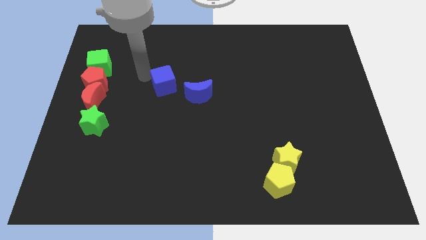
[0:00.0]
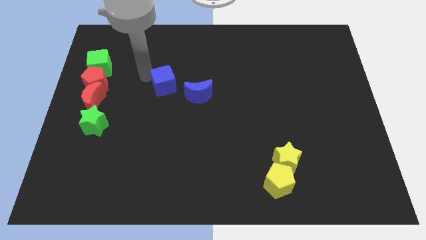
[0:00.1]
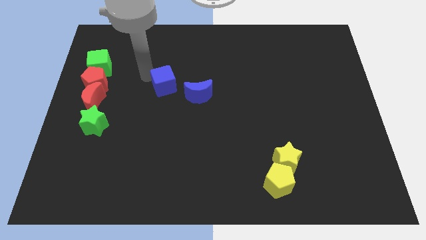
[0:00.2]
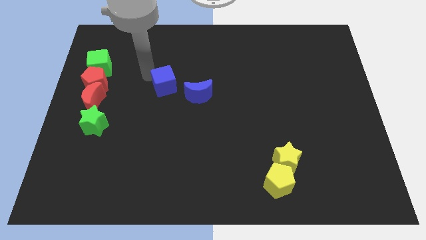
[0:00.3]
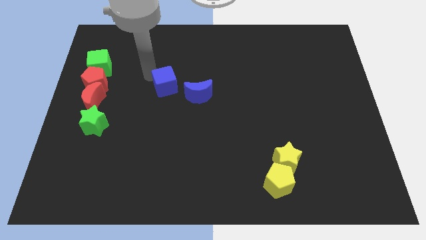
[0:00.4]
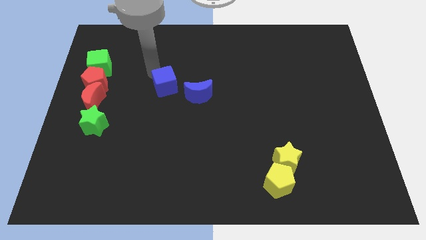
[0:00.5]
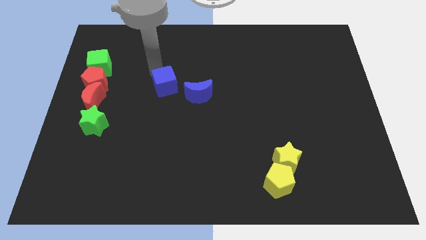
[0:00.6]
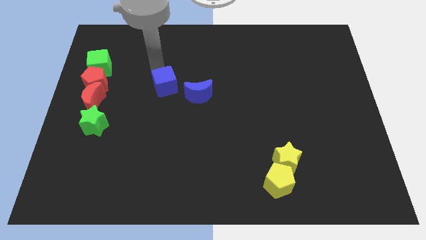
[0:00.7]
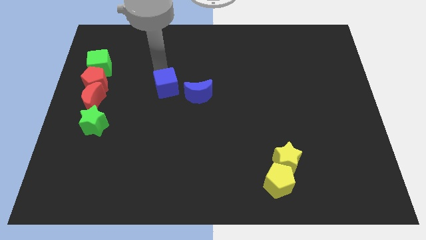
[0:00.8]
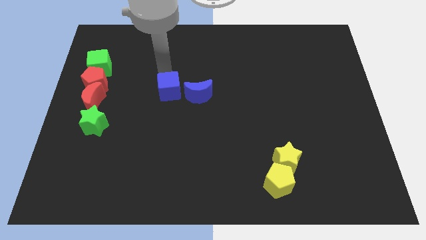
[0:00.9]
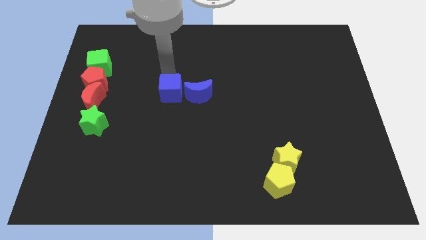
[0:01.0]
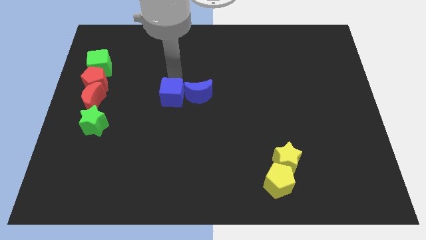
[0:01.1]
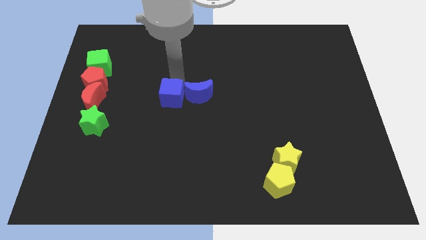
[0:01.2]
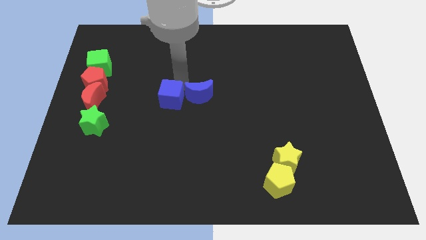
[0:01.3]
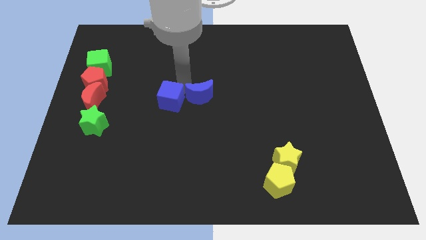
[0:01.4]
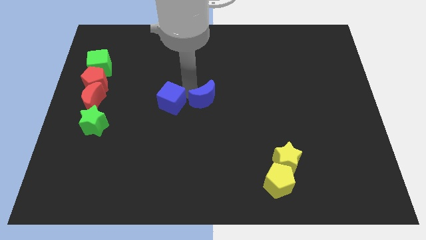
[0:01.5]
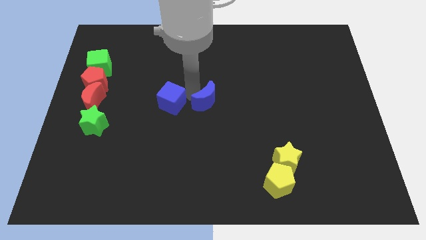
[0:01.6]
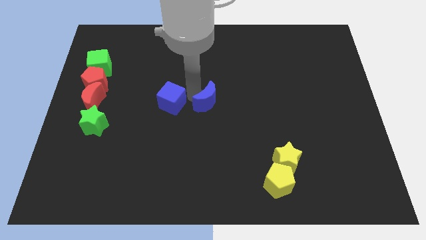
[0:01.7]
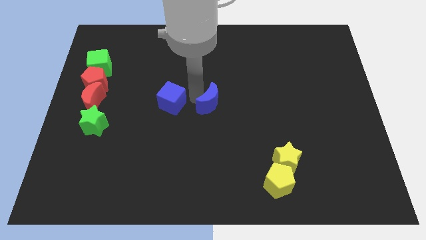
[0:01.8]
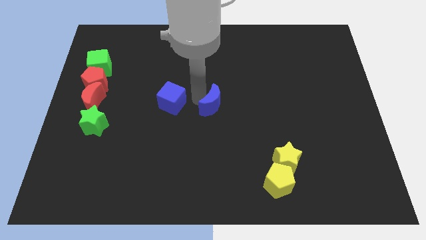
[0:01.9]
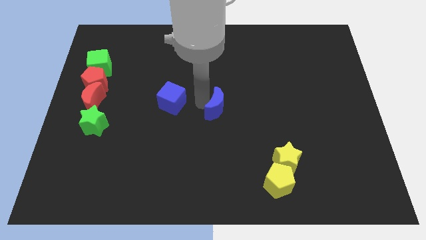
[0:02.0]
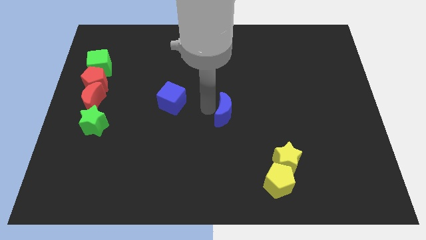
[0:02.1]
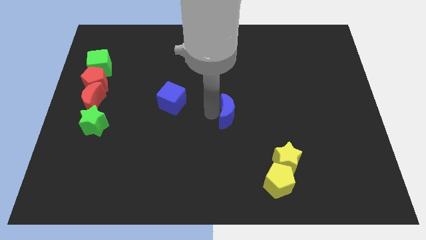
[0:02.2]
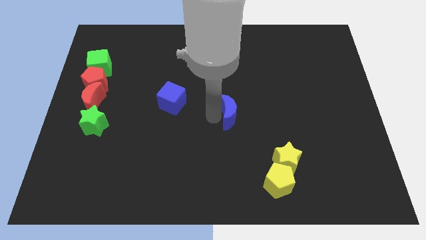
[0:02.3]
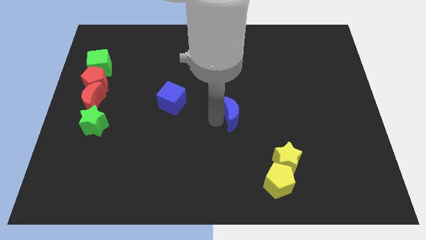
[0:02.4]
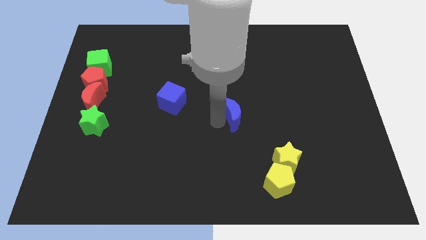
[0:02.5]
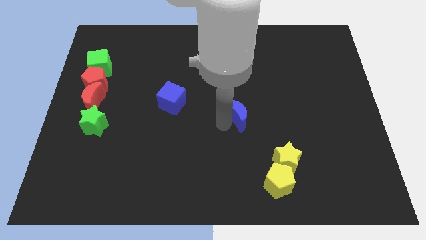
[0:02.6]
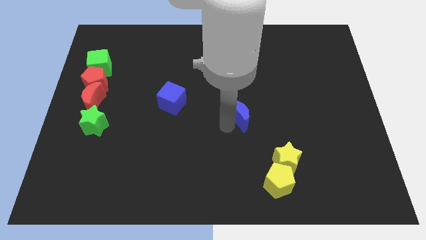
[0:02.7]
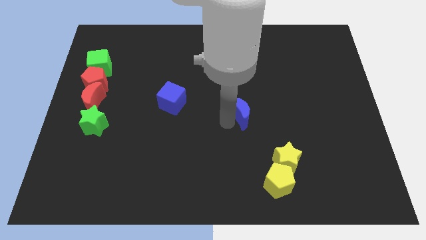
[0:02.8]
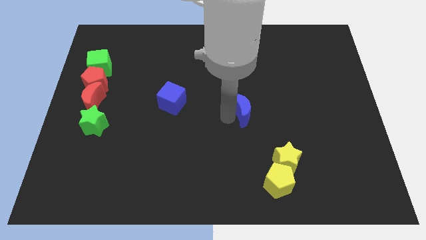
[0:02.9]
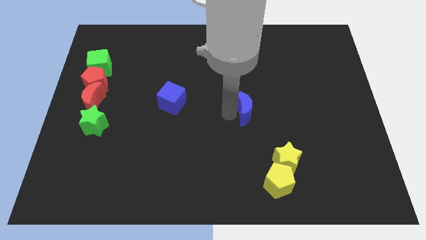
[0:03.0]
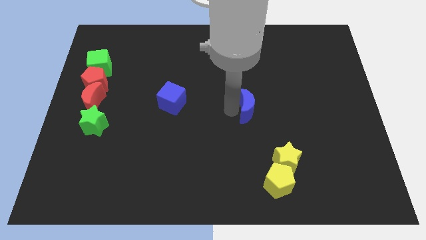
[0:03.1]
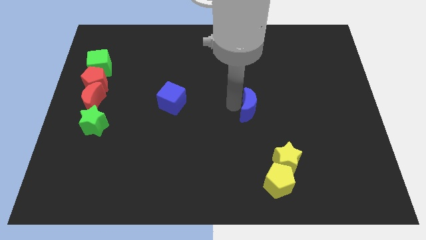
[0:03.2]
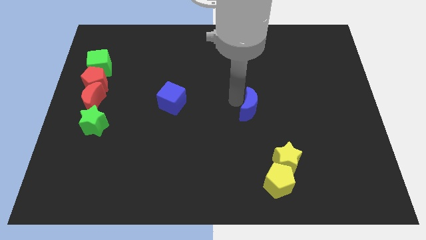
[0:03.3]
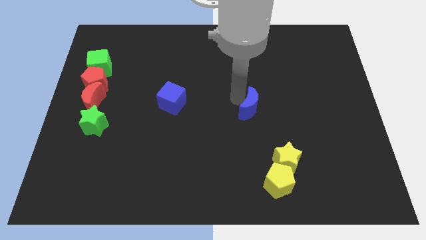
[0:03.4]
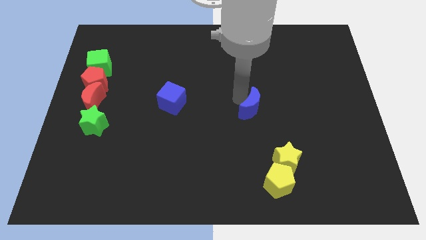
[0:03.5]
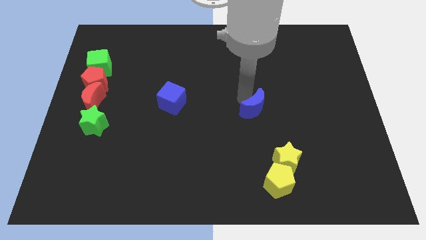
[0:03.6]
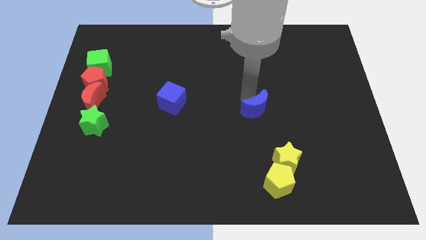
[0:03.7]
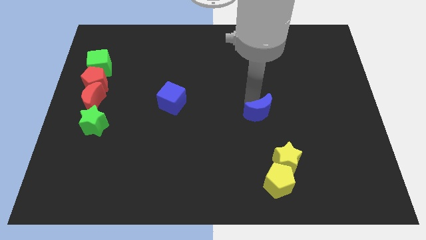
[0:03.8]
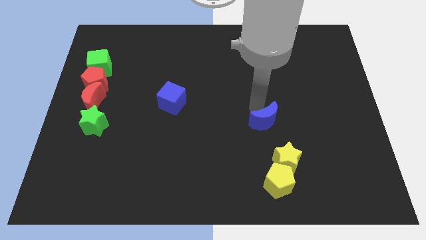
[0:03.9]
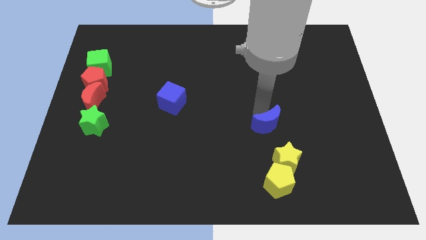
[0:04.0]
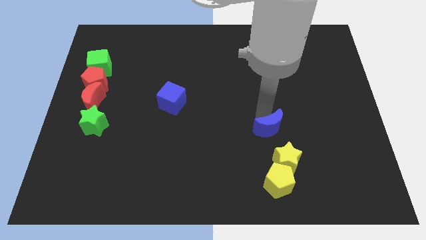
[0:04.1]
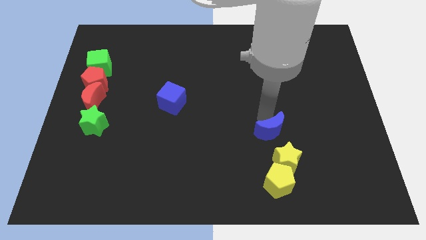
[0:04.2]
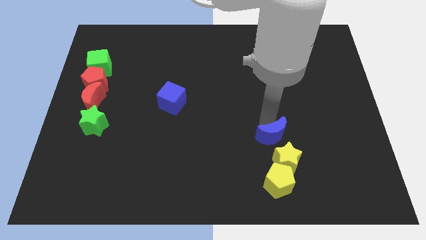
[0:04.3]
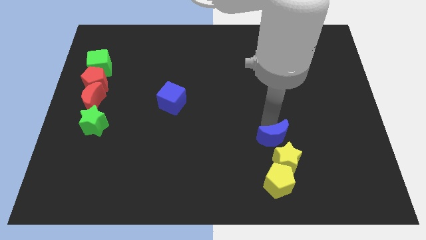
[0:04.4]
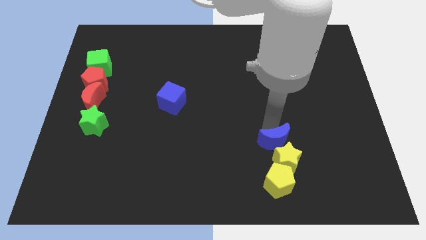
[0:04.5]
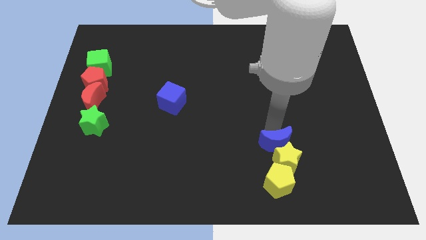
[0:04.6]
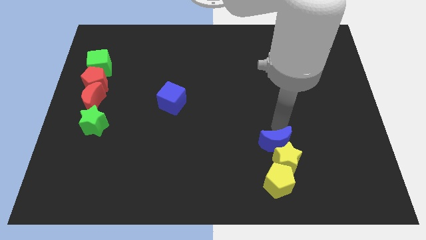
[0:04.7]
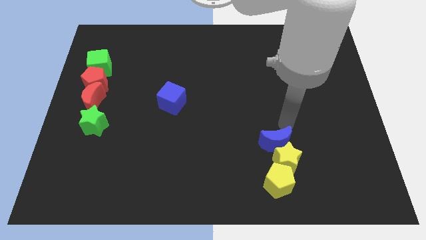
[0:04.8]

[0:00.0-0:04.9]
move the blue crescent to the top left side of the yellow star

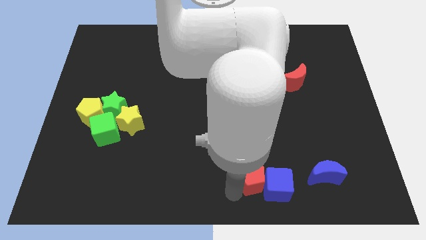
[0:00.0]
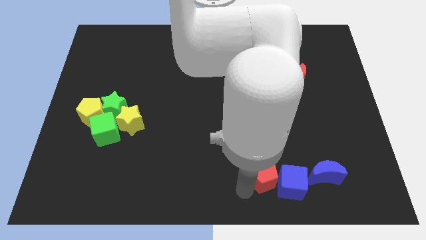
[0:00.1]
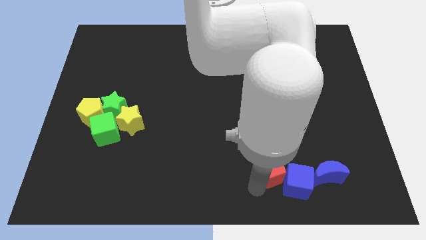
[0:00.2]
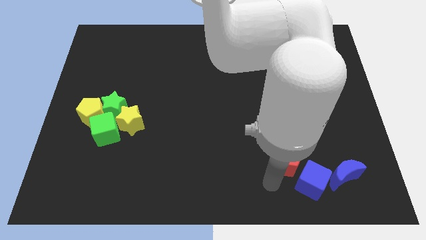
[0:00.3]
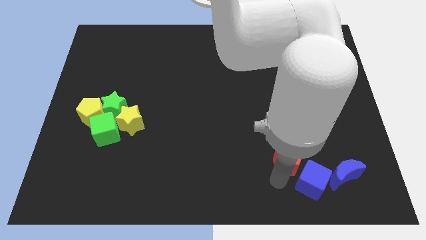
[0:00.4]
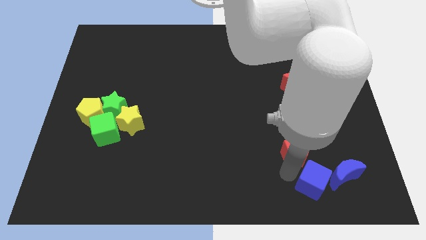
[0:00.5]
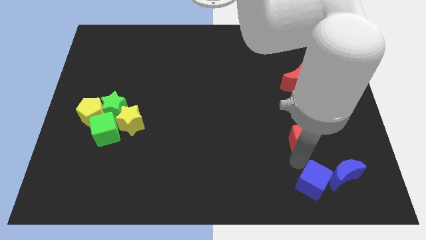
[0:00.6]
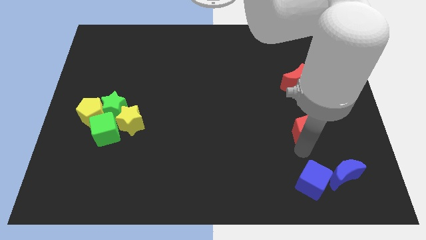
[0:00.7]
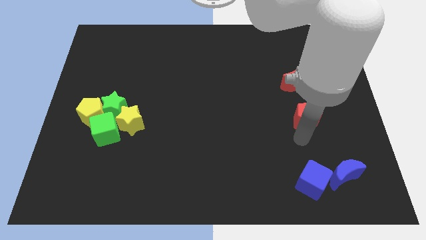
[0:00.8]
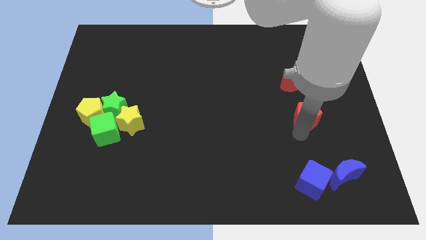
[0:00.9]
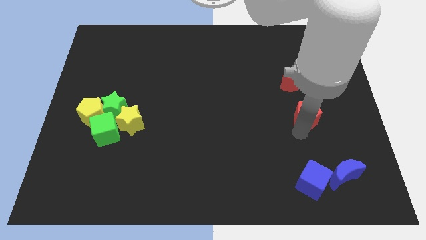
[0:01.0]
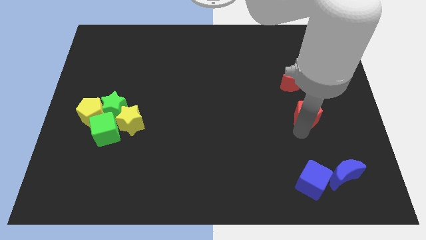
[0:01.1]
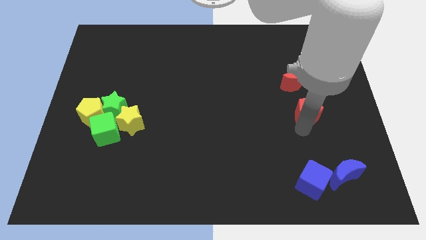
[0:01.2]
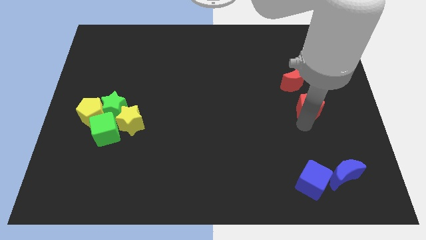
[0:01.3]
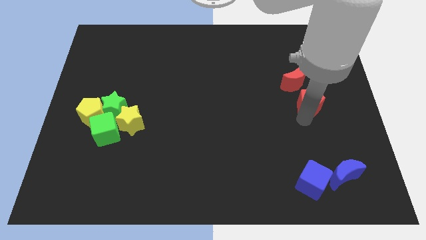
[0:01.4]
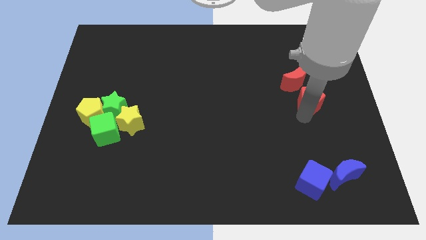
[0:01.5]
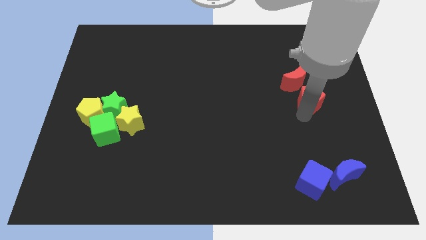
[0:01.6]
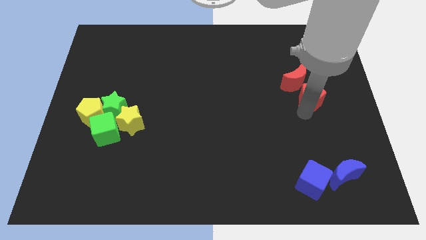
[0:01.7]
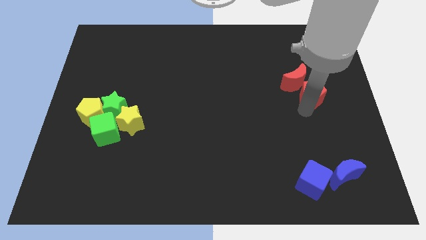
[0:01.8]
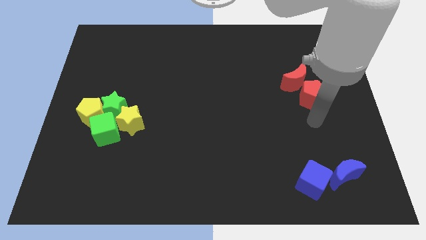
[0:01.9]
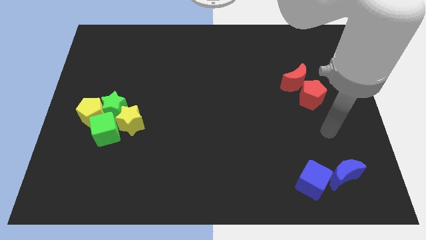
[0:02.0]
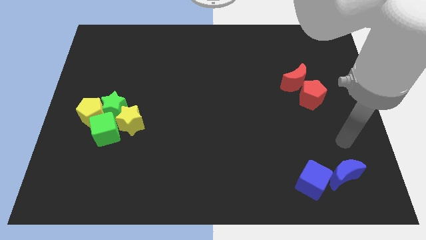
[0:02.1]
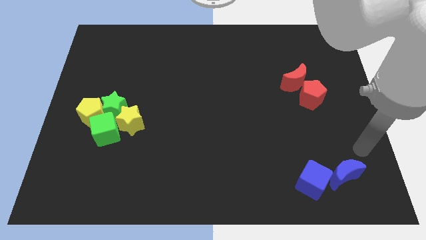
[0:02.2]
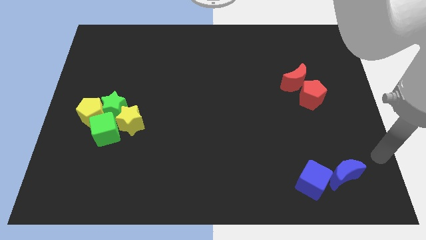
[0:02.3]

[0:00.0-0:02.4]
push the red pentagon beside the right to the red moon

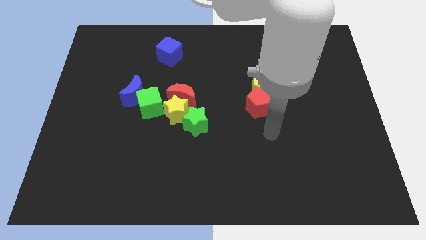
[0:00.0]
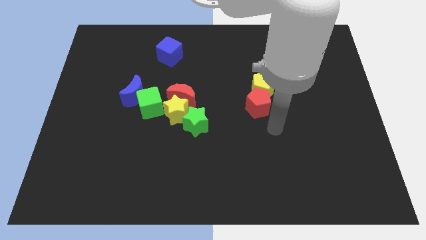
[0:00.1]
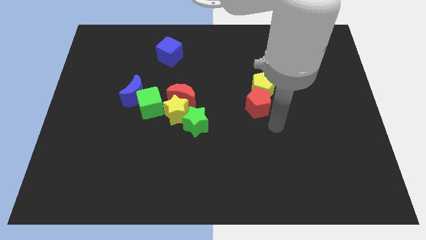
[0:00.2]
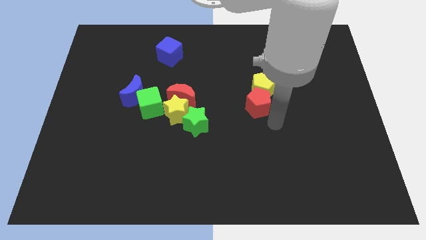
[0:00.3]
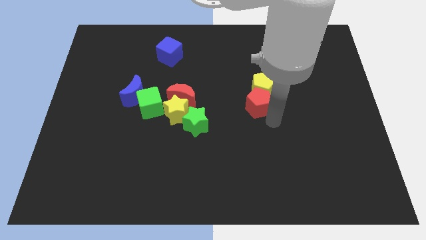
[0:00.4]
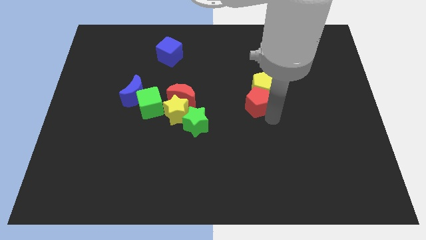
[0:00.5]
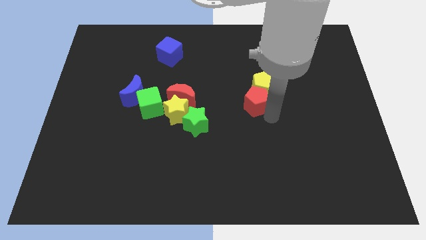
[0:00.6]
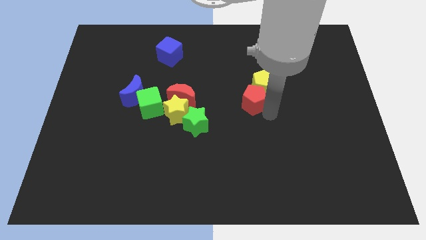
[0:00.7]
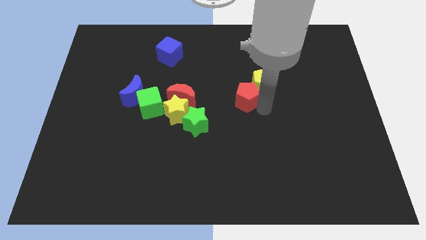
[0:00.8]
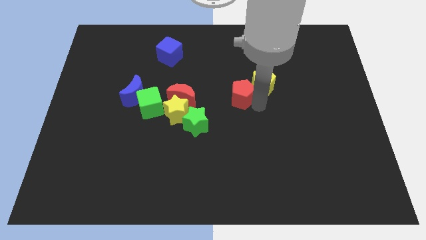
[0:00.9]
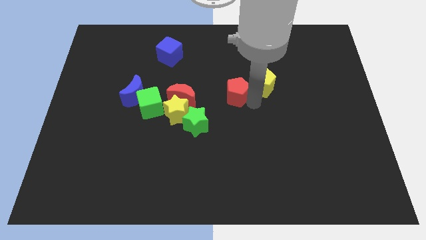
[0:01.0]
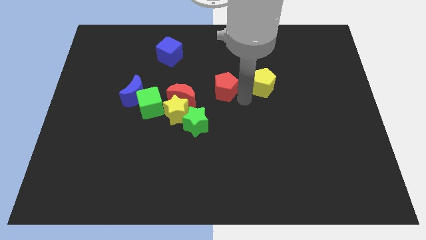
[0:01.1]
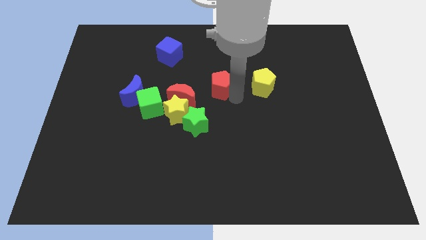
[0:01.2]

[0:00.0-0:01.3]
push the red pentagon to the left of the yellow pentagon

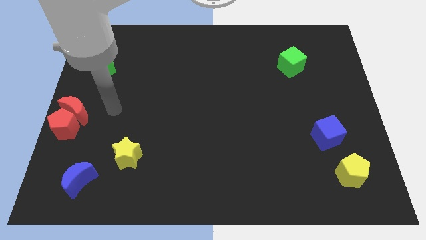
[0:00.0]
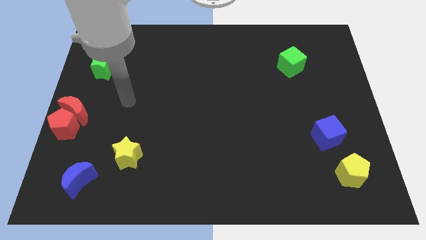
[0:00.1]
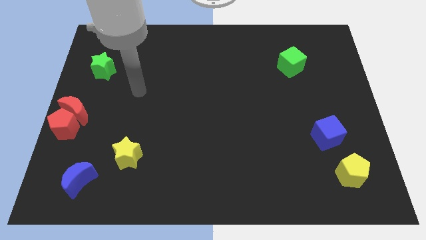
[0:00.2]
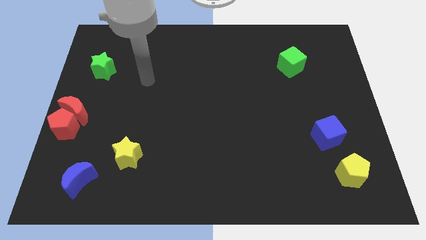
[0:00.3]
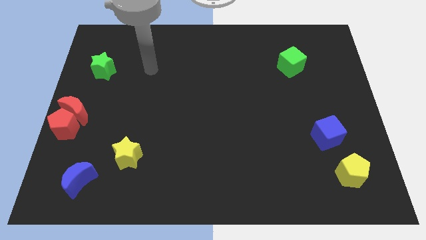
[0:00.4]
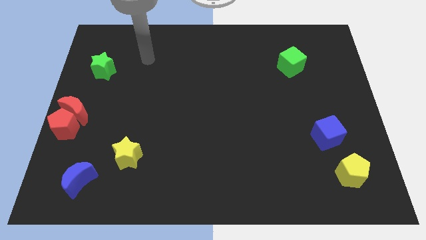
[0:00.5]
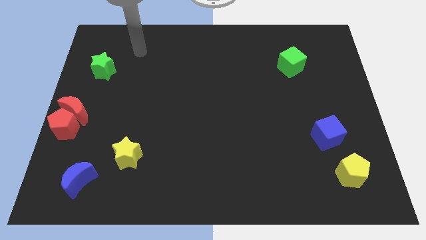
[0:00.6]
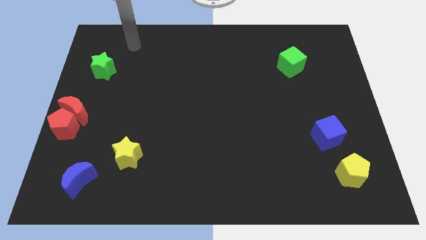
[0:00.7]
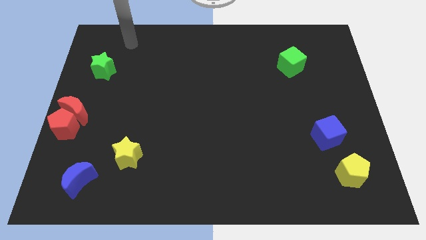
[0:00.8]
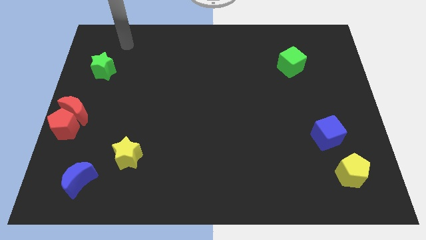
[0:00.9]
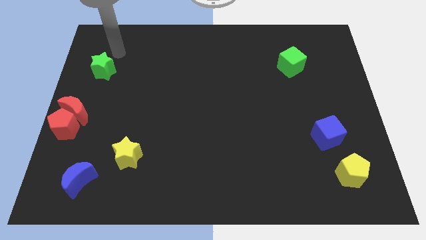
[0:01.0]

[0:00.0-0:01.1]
move robot arm towards green star
